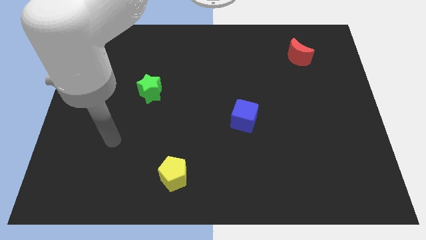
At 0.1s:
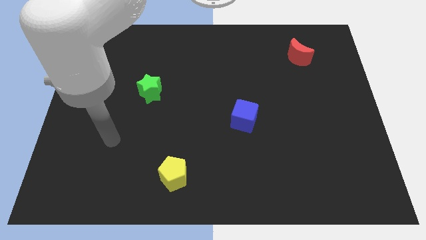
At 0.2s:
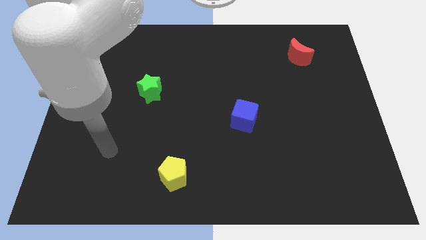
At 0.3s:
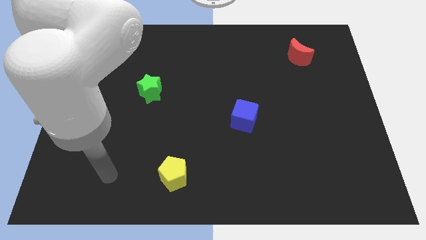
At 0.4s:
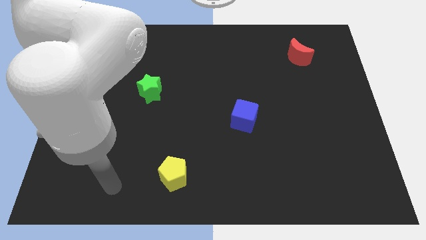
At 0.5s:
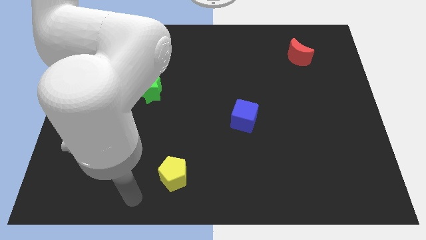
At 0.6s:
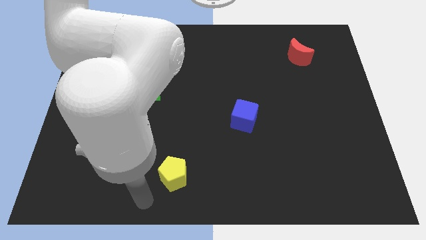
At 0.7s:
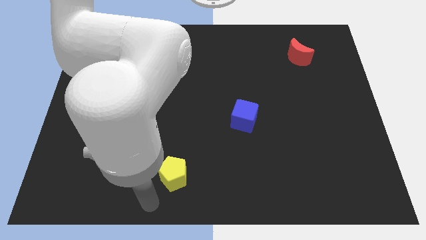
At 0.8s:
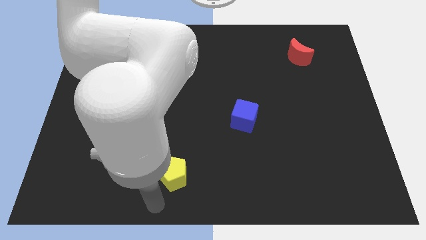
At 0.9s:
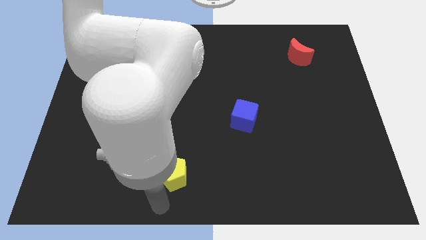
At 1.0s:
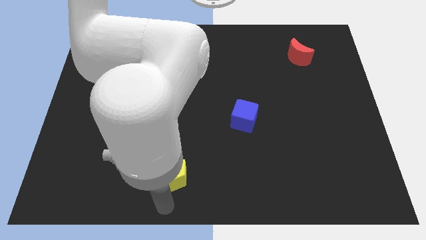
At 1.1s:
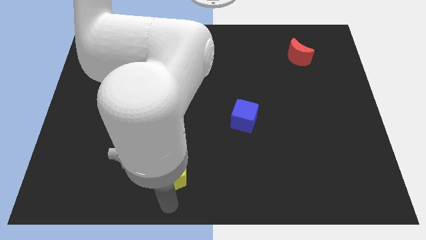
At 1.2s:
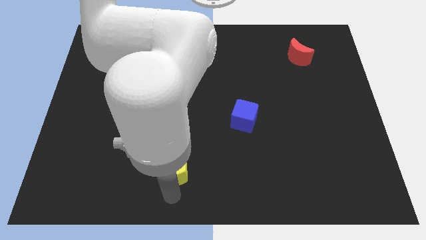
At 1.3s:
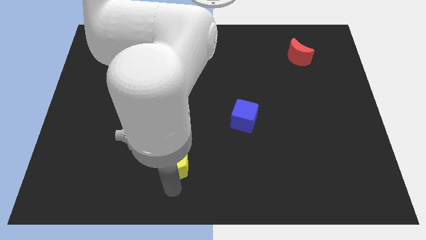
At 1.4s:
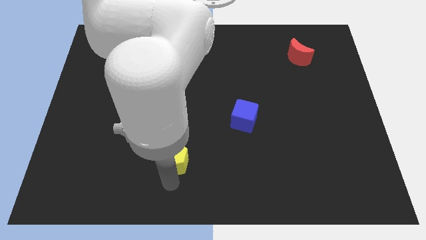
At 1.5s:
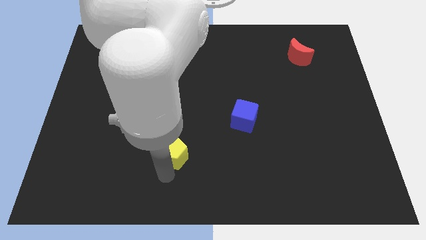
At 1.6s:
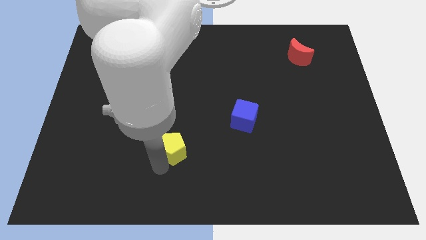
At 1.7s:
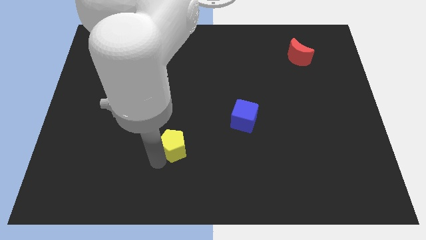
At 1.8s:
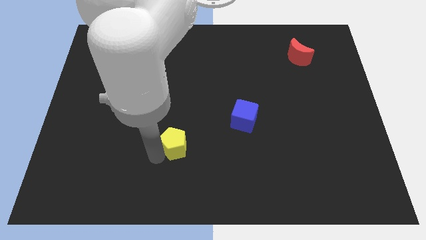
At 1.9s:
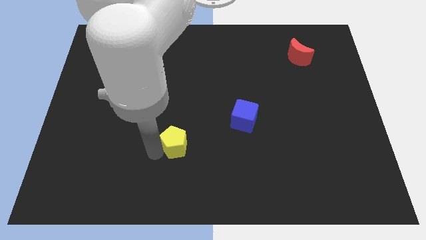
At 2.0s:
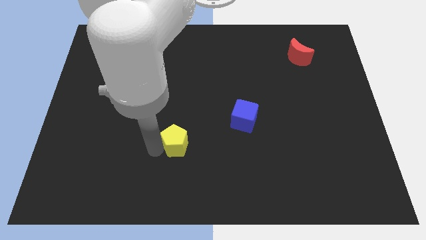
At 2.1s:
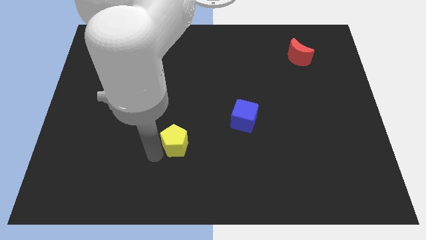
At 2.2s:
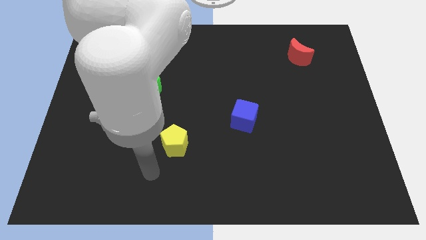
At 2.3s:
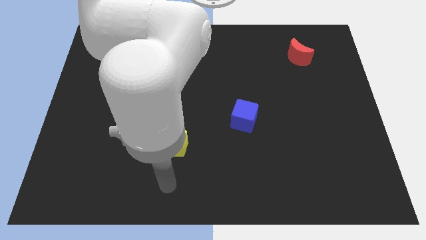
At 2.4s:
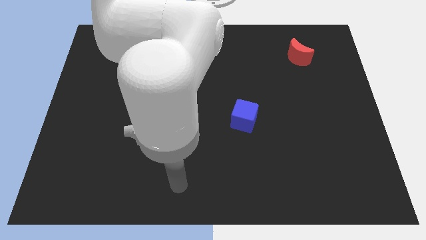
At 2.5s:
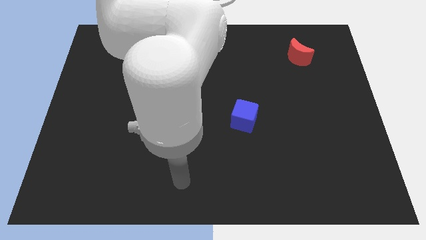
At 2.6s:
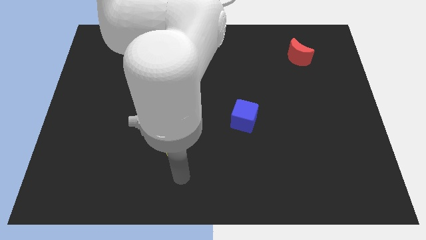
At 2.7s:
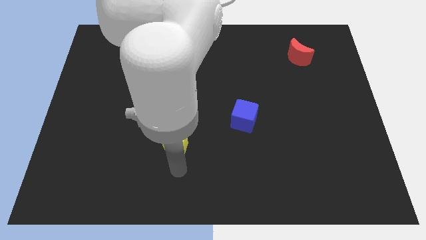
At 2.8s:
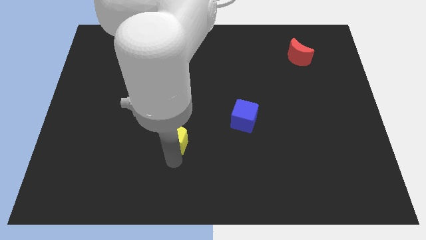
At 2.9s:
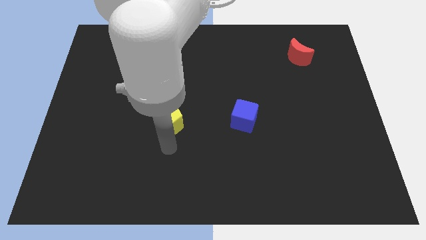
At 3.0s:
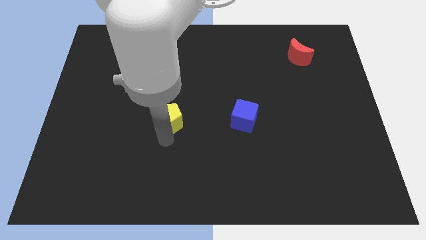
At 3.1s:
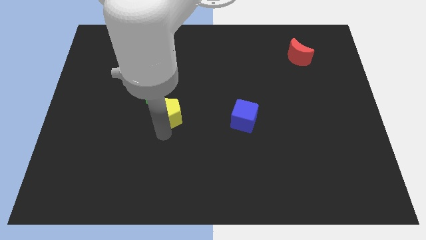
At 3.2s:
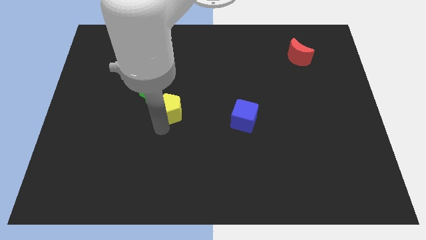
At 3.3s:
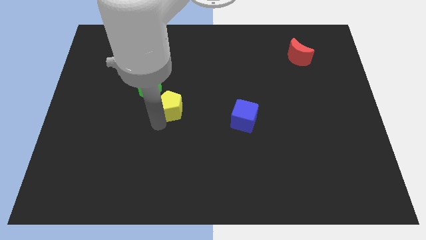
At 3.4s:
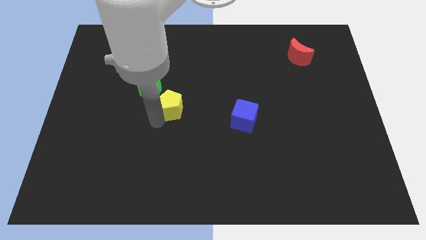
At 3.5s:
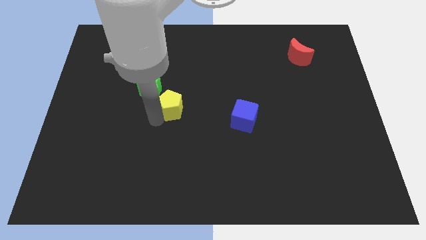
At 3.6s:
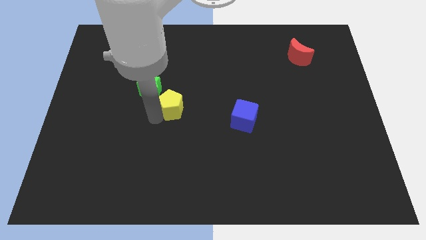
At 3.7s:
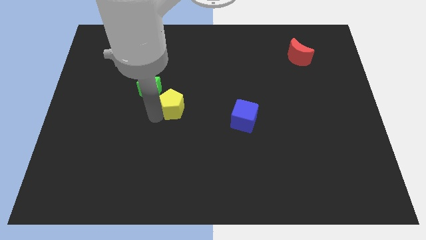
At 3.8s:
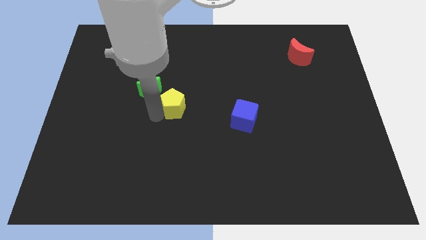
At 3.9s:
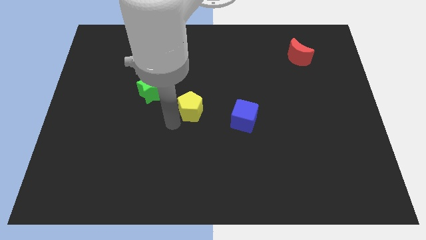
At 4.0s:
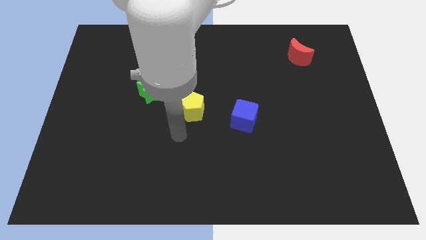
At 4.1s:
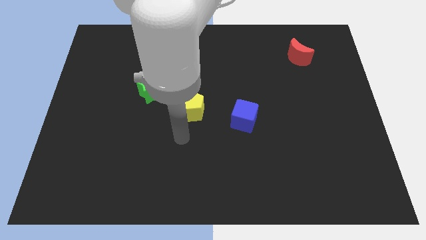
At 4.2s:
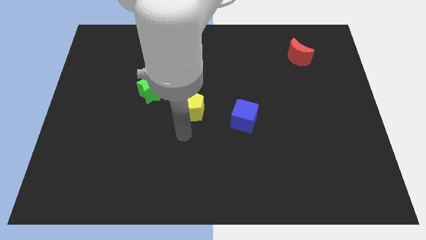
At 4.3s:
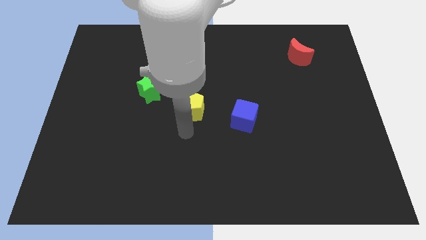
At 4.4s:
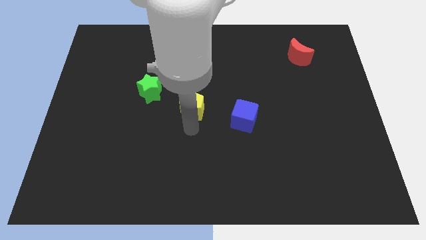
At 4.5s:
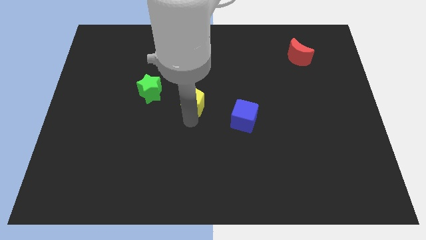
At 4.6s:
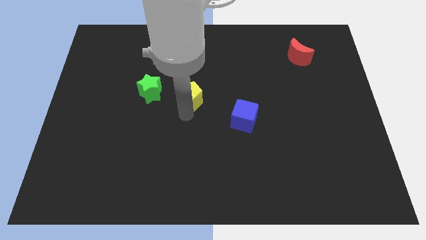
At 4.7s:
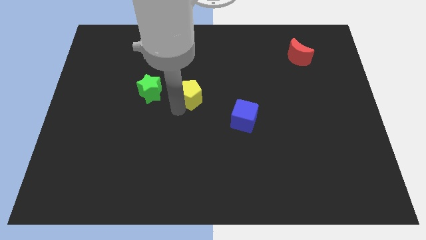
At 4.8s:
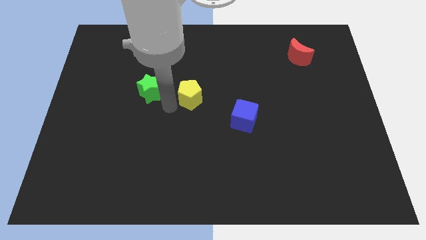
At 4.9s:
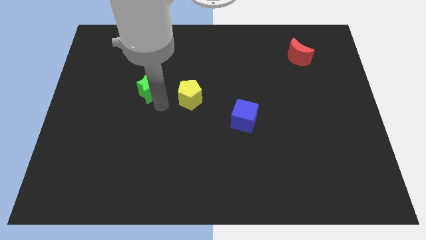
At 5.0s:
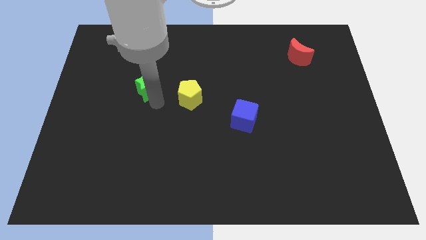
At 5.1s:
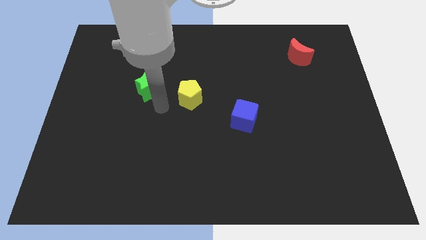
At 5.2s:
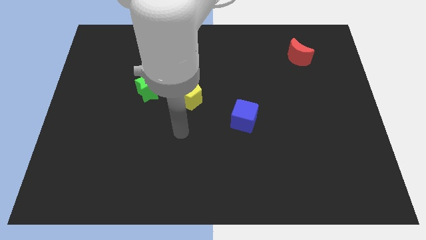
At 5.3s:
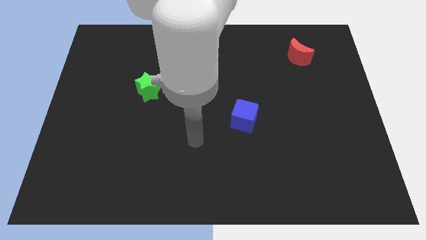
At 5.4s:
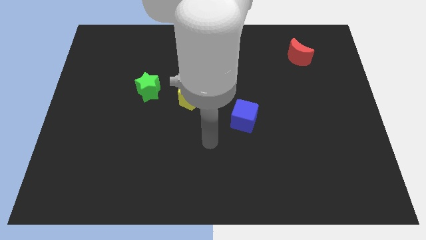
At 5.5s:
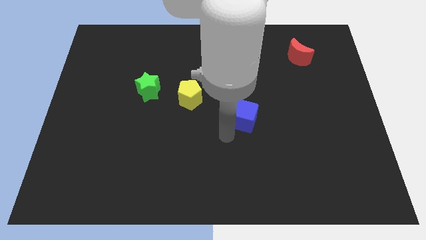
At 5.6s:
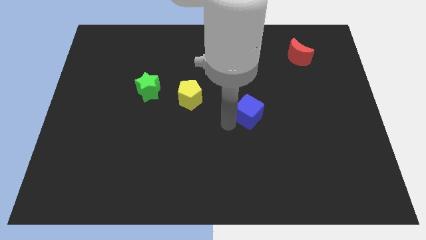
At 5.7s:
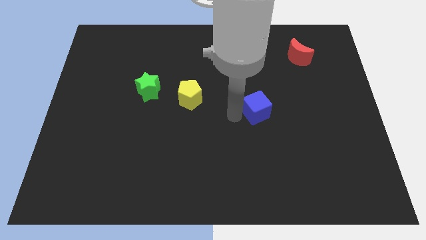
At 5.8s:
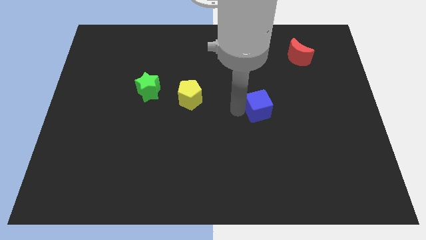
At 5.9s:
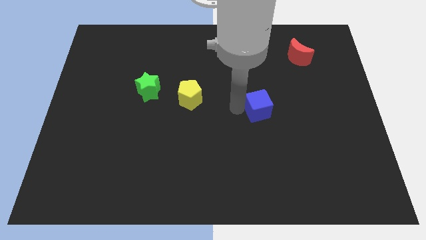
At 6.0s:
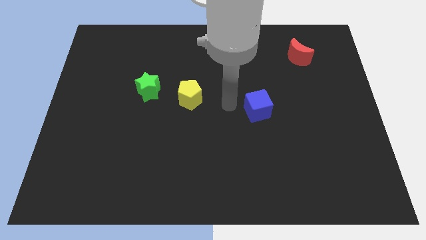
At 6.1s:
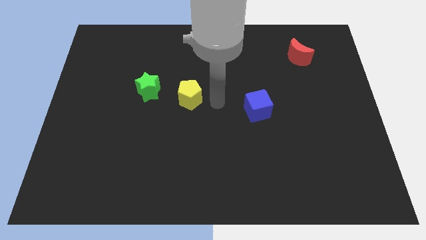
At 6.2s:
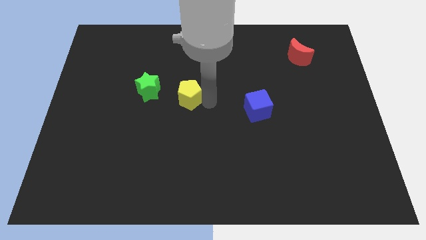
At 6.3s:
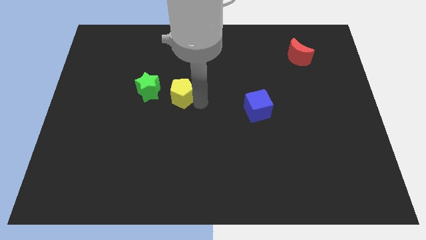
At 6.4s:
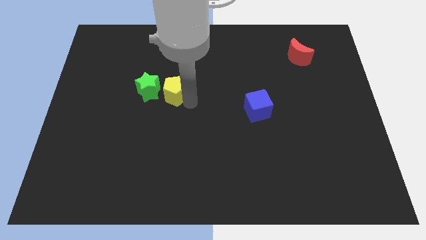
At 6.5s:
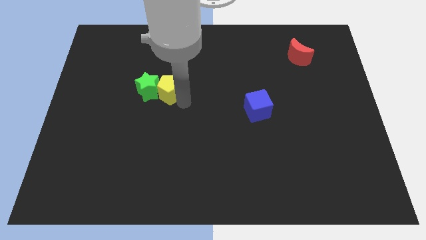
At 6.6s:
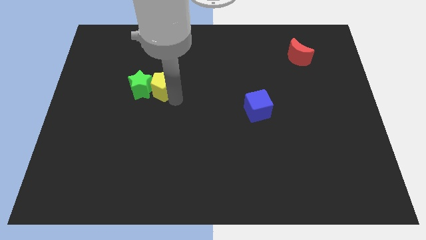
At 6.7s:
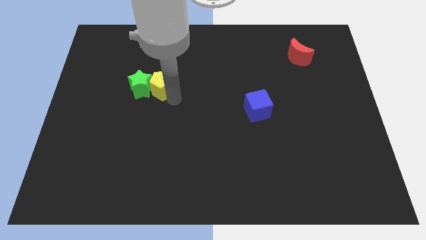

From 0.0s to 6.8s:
slide the yellow pentagon to the green star

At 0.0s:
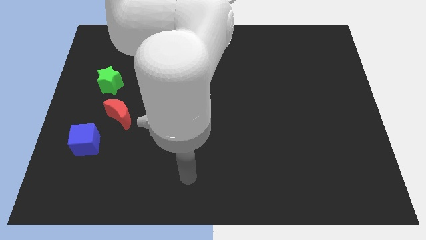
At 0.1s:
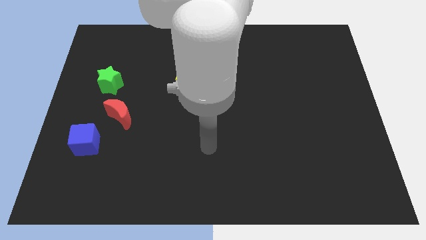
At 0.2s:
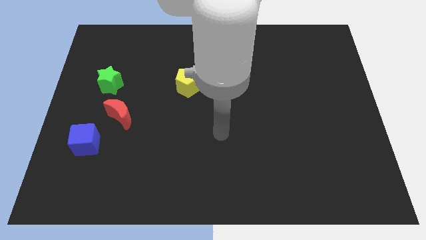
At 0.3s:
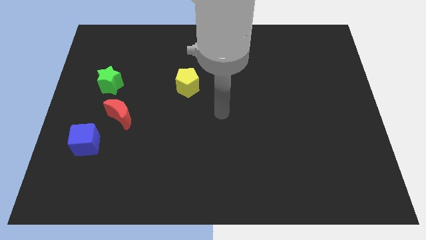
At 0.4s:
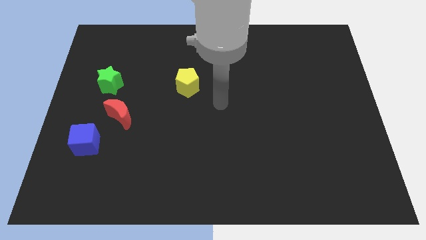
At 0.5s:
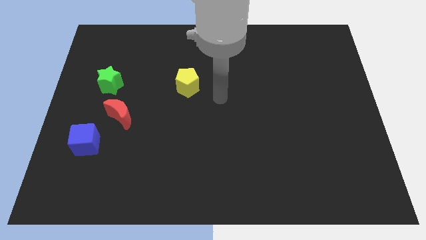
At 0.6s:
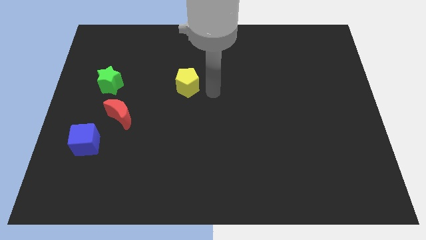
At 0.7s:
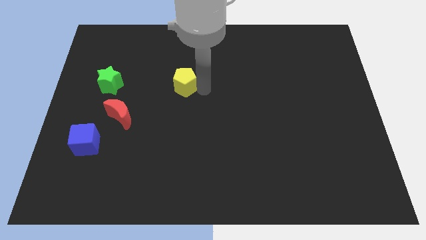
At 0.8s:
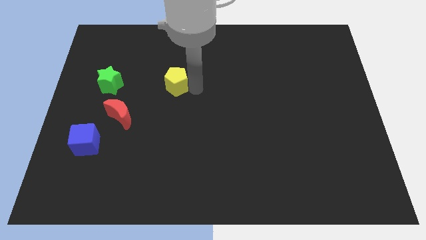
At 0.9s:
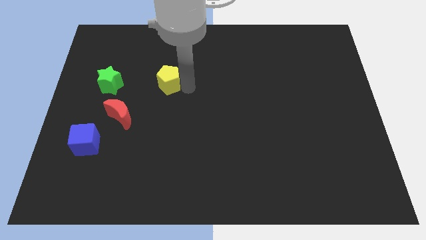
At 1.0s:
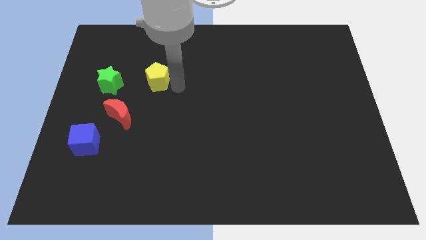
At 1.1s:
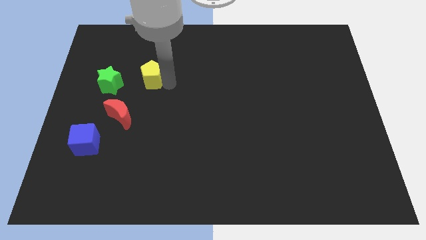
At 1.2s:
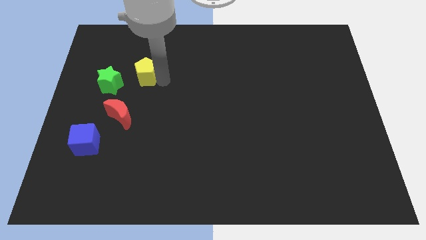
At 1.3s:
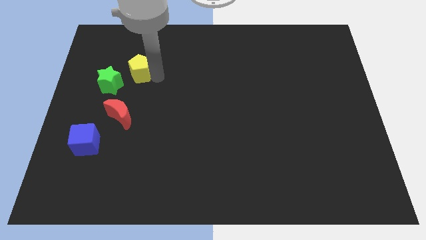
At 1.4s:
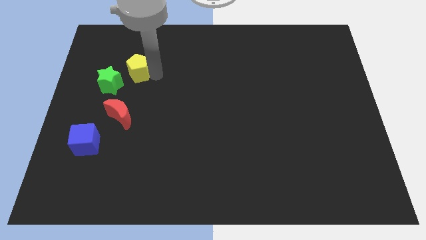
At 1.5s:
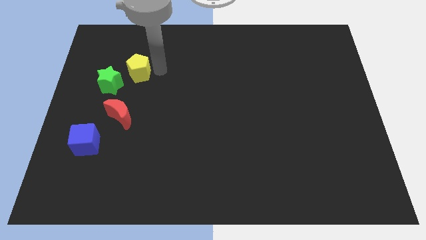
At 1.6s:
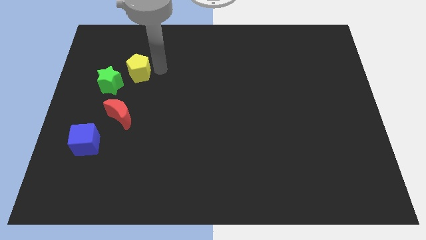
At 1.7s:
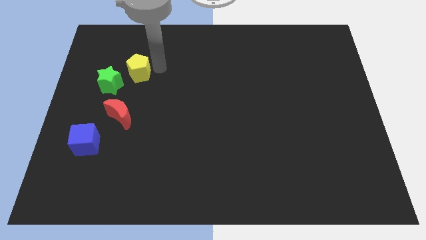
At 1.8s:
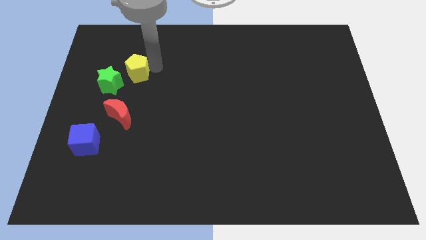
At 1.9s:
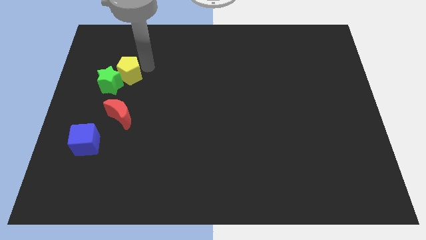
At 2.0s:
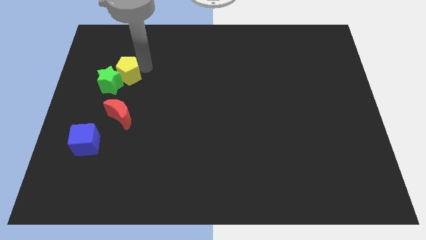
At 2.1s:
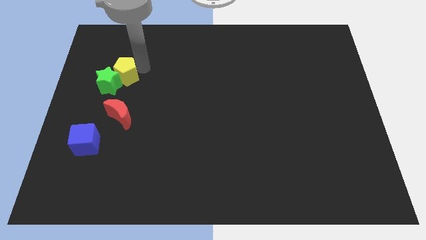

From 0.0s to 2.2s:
slide the yellow pentagon close to the green block
